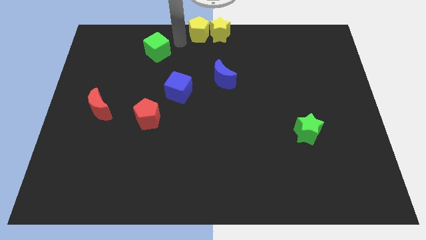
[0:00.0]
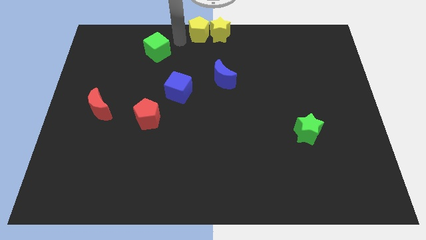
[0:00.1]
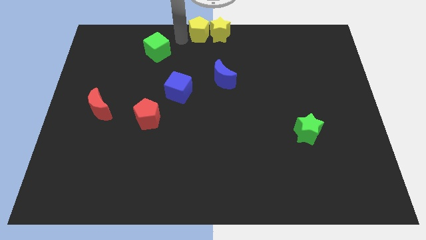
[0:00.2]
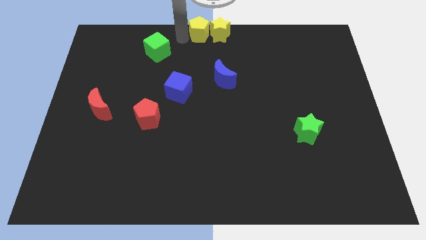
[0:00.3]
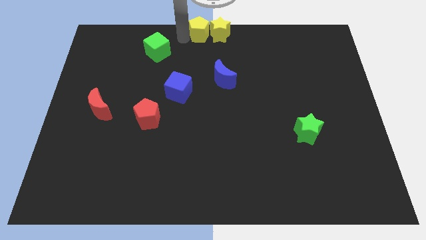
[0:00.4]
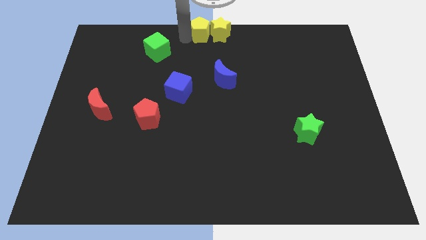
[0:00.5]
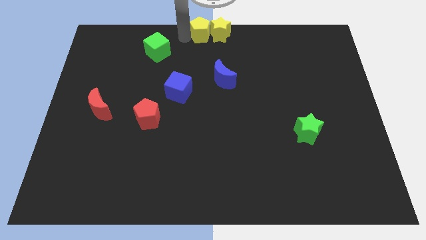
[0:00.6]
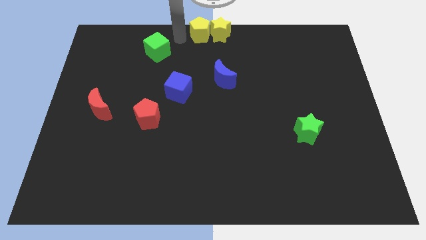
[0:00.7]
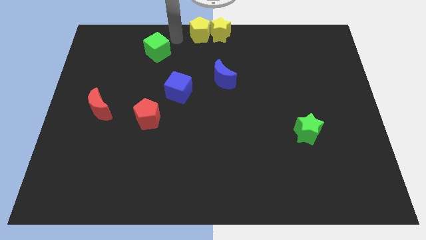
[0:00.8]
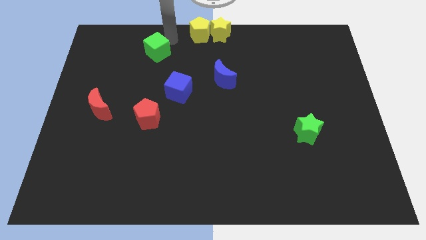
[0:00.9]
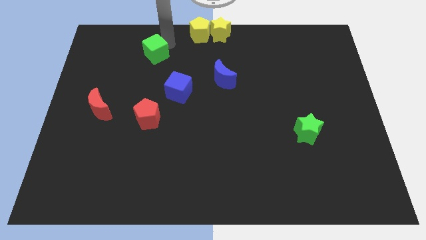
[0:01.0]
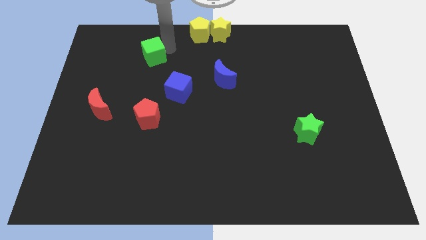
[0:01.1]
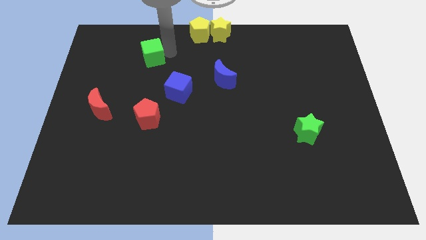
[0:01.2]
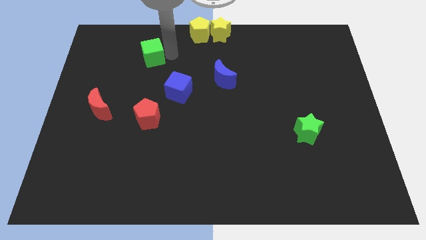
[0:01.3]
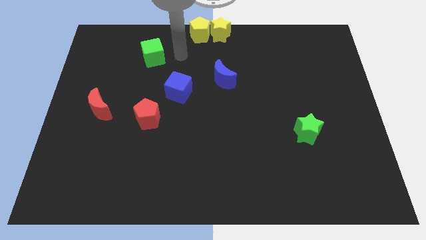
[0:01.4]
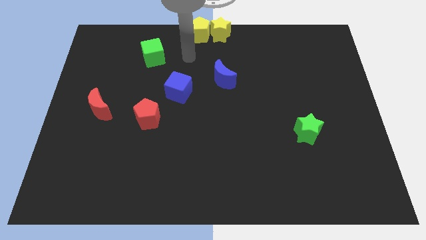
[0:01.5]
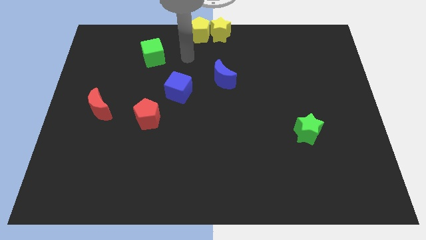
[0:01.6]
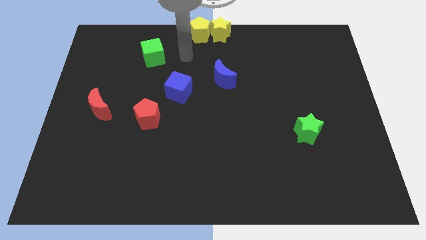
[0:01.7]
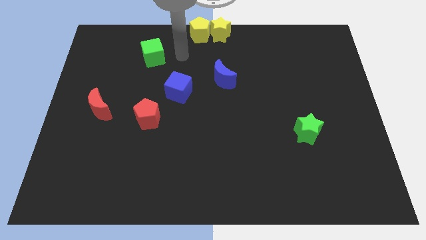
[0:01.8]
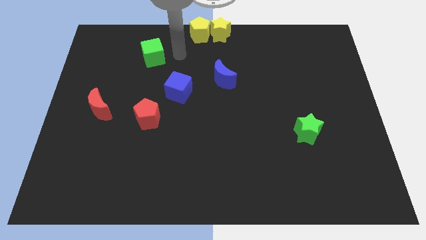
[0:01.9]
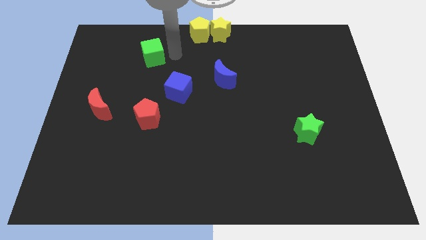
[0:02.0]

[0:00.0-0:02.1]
touch the green cube

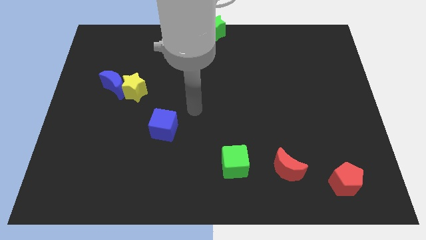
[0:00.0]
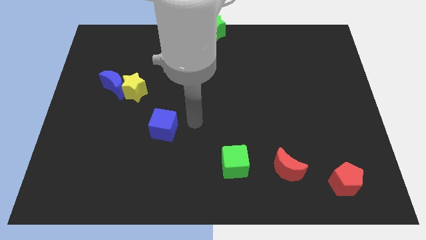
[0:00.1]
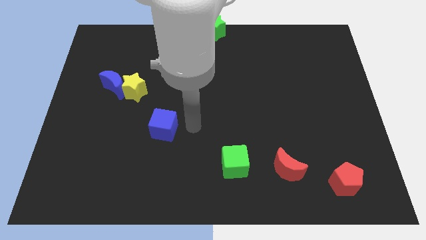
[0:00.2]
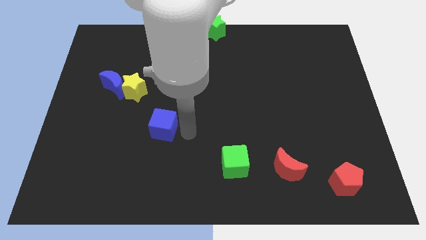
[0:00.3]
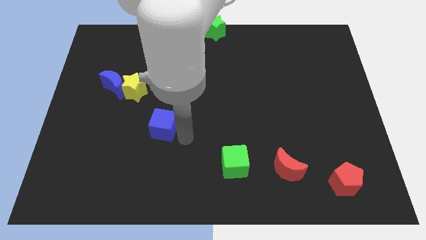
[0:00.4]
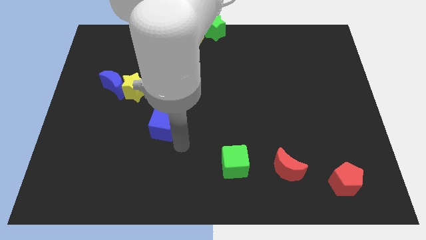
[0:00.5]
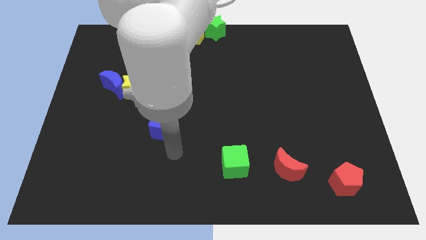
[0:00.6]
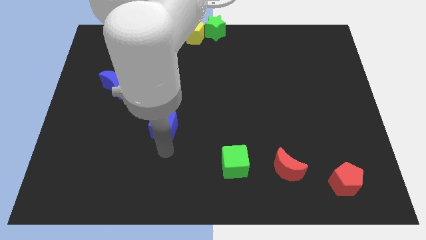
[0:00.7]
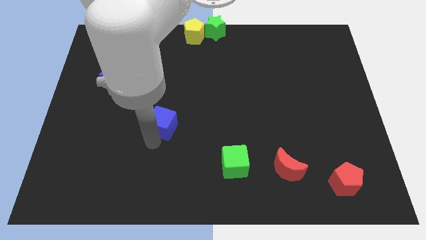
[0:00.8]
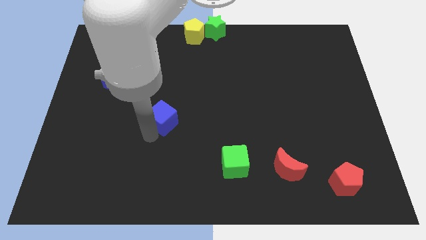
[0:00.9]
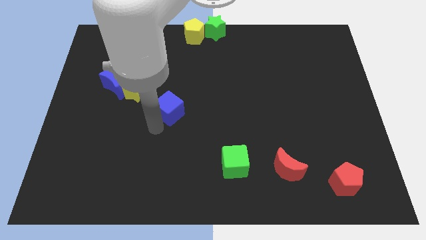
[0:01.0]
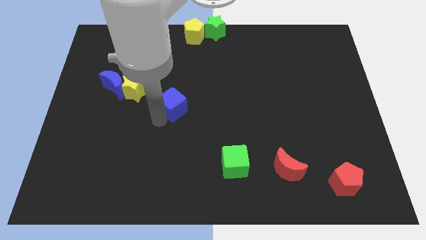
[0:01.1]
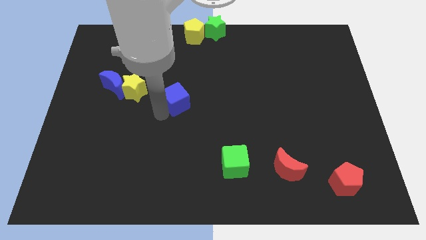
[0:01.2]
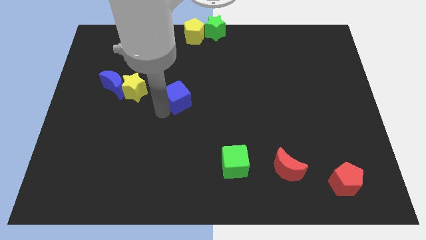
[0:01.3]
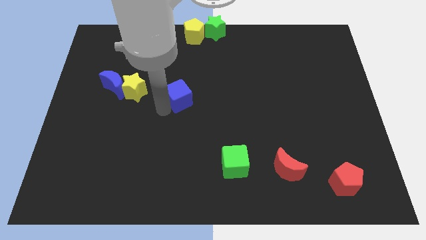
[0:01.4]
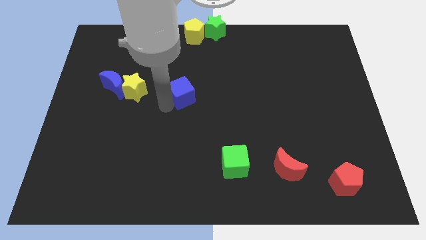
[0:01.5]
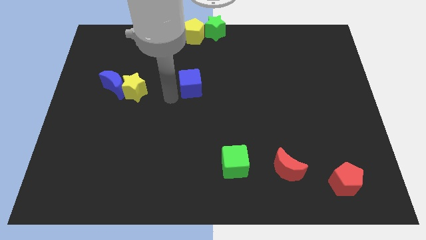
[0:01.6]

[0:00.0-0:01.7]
move the blue cube to the right of the yellow star

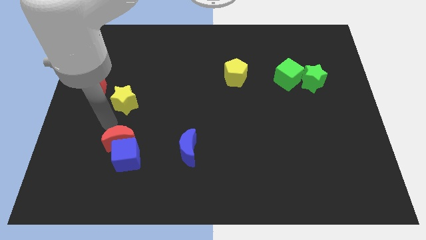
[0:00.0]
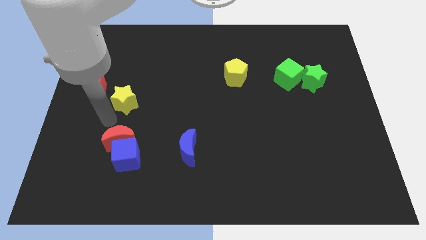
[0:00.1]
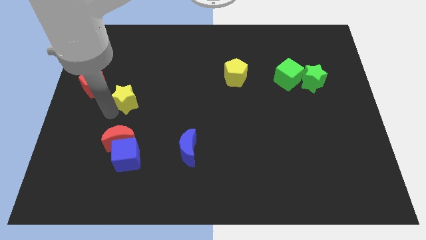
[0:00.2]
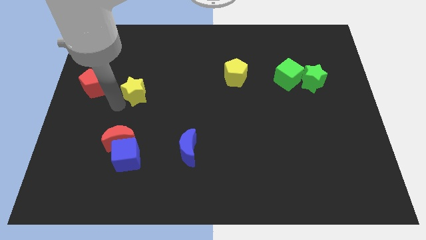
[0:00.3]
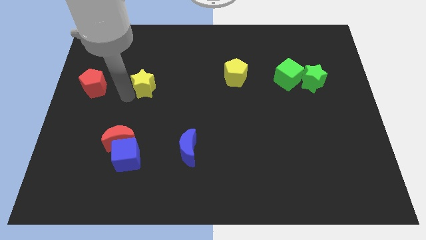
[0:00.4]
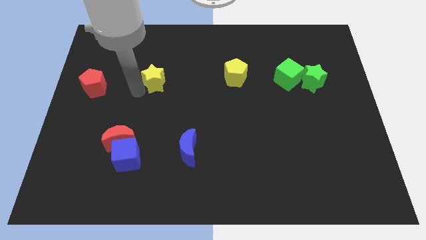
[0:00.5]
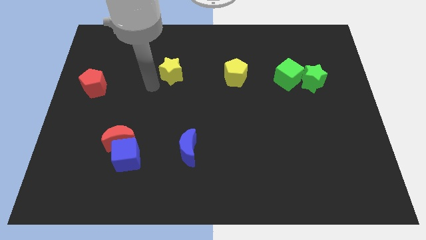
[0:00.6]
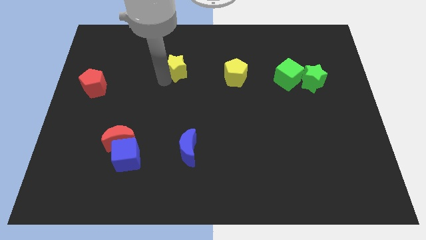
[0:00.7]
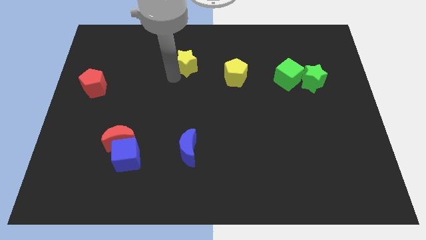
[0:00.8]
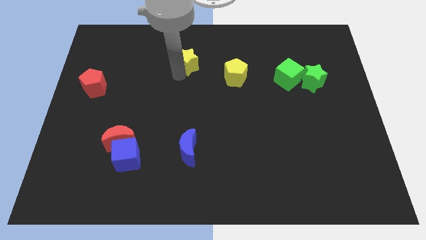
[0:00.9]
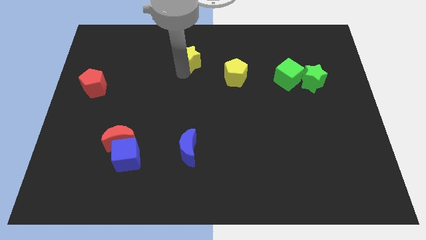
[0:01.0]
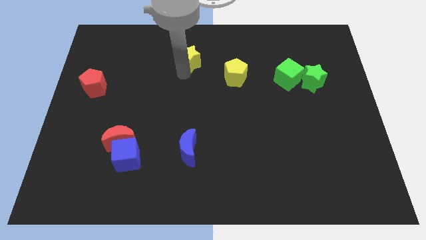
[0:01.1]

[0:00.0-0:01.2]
move the yellow star parallel left to the yellow pentagon

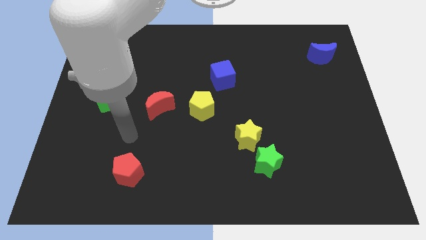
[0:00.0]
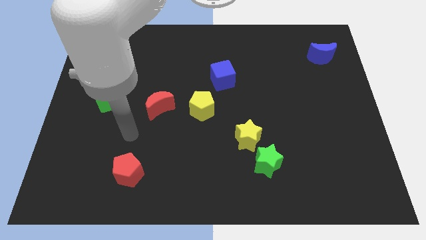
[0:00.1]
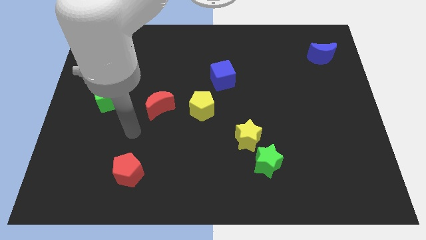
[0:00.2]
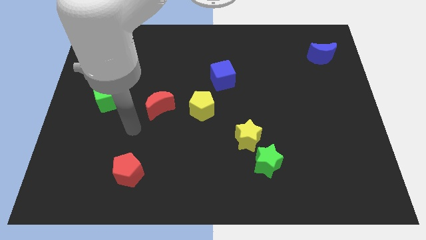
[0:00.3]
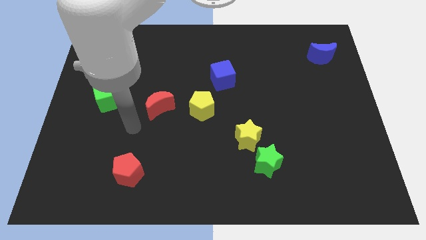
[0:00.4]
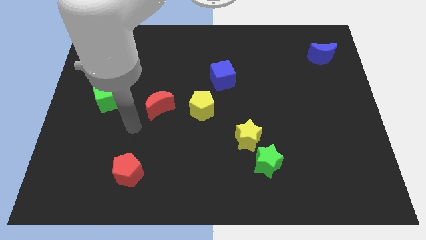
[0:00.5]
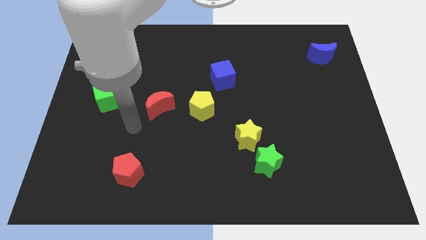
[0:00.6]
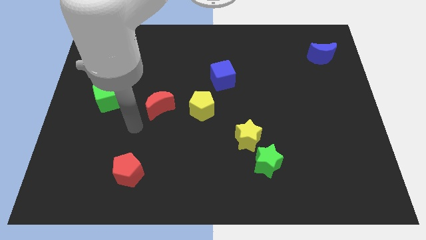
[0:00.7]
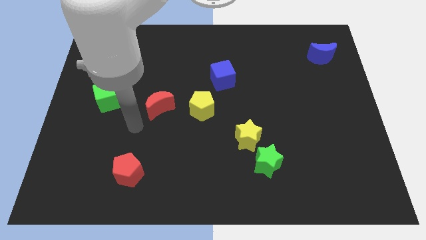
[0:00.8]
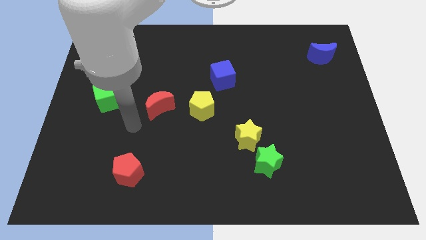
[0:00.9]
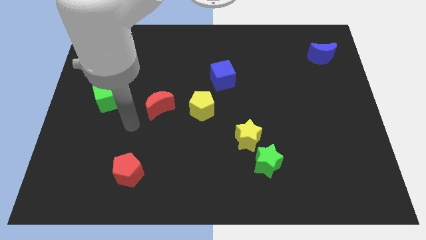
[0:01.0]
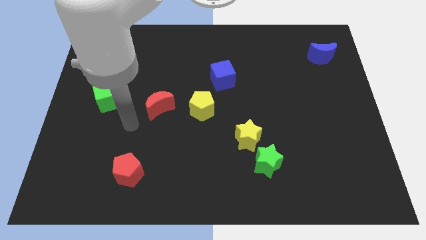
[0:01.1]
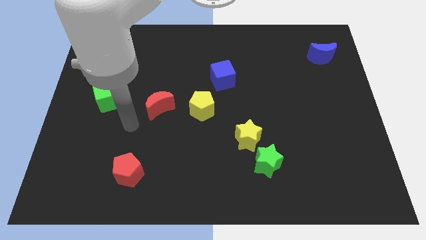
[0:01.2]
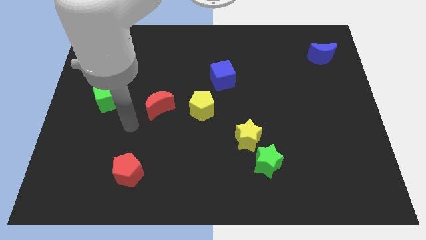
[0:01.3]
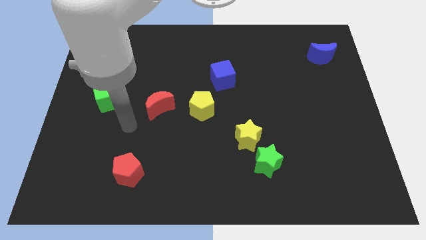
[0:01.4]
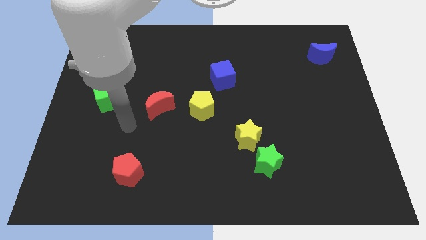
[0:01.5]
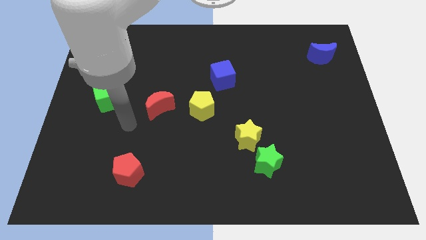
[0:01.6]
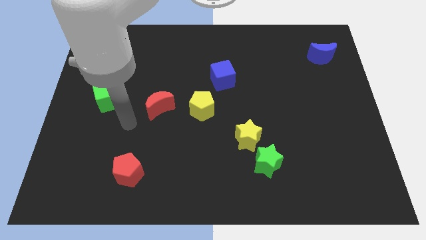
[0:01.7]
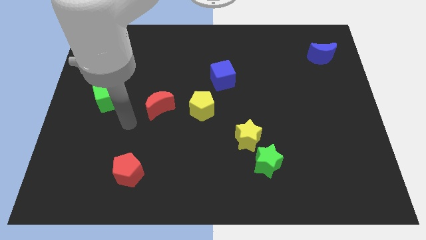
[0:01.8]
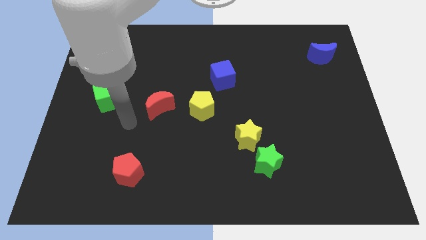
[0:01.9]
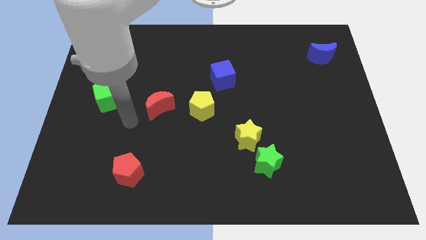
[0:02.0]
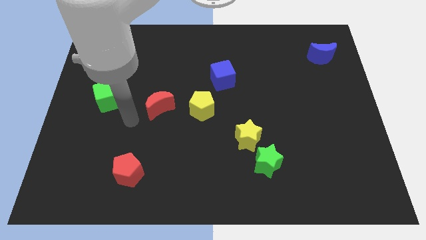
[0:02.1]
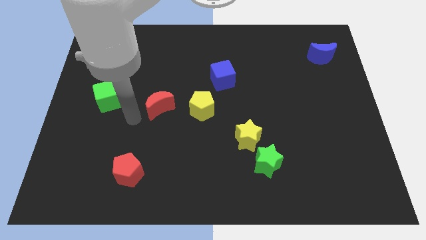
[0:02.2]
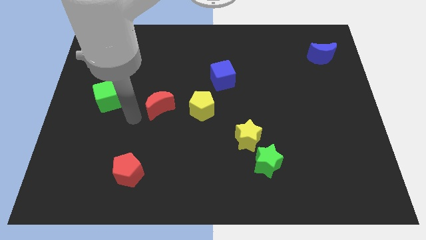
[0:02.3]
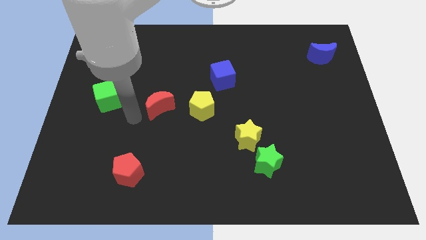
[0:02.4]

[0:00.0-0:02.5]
move your arm close to the red moon

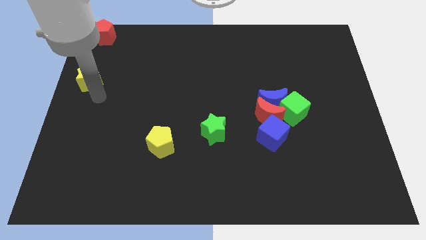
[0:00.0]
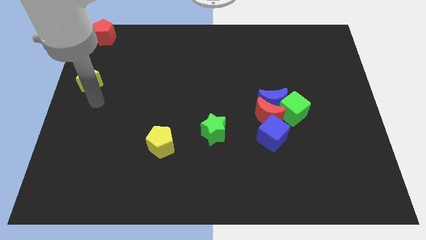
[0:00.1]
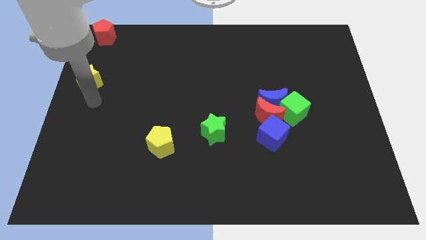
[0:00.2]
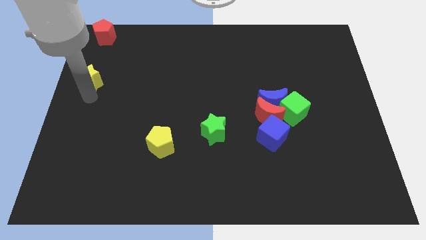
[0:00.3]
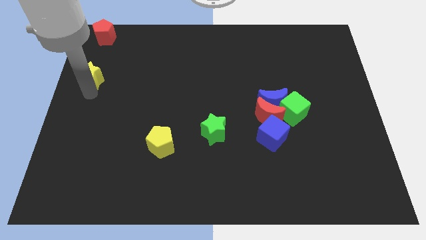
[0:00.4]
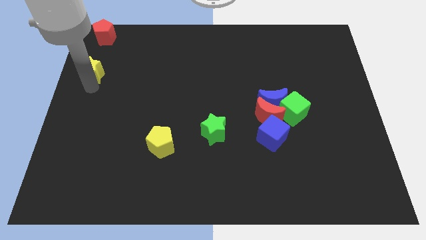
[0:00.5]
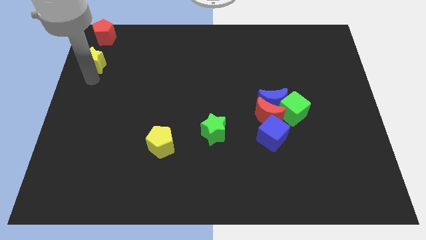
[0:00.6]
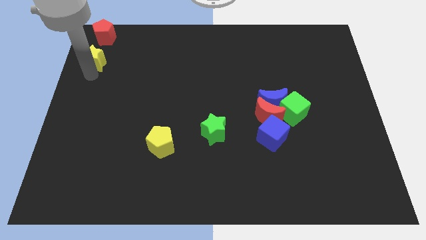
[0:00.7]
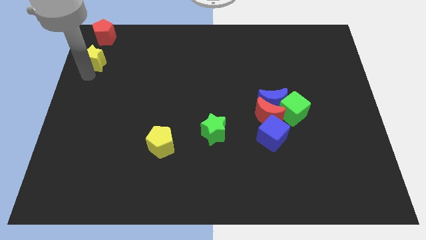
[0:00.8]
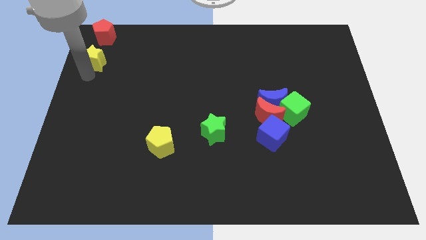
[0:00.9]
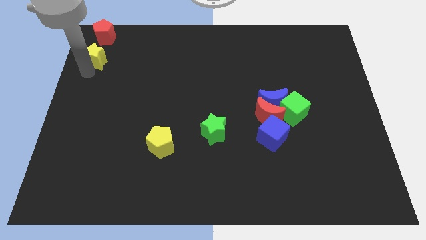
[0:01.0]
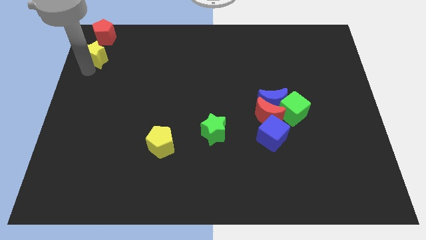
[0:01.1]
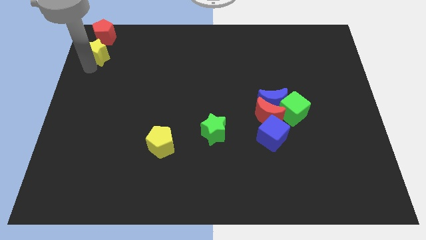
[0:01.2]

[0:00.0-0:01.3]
place yellow star below the red pentagon
